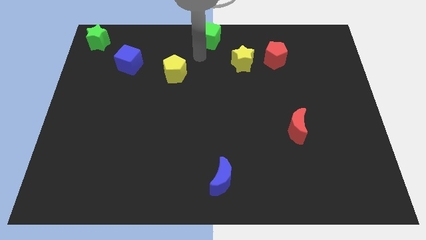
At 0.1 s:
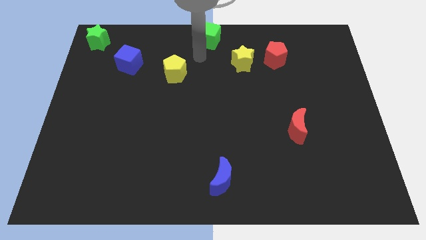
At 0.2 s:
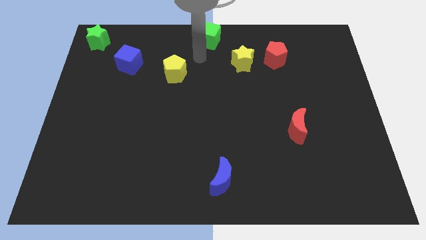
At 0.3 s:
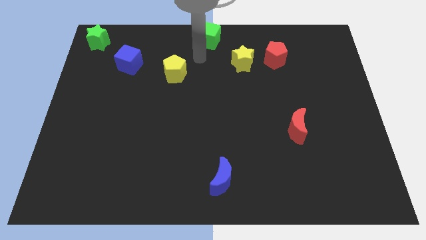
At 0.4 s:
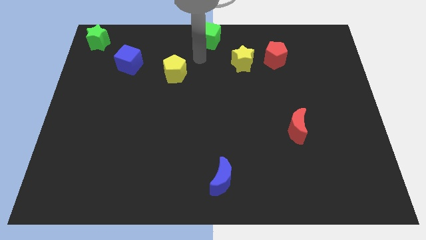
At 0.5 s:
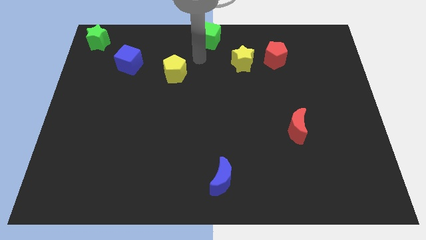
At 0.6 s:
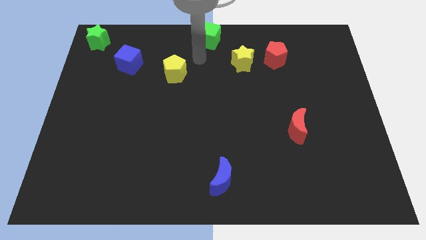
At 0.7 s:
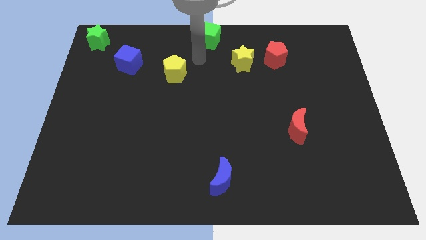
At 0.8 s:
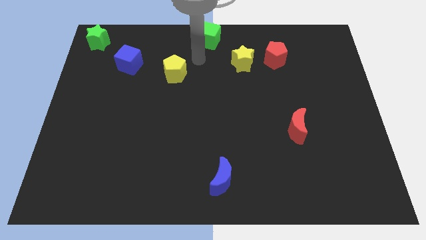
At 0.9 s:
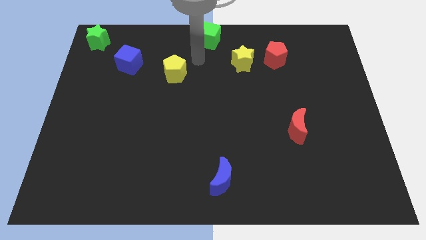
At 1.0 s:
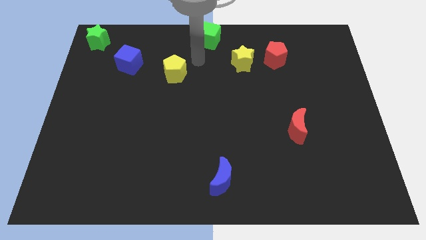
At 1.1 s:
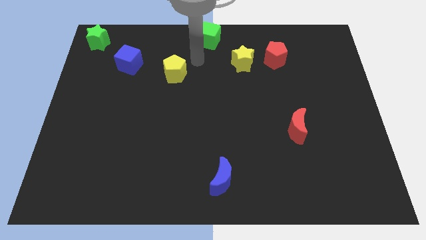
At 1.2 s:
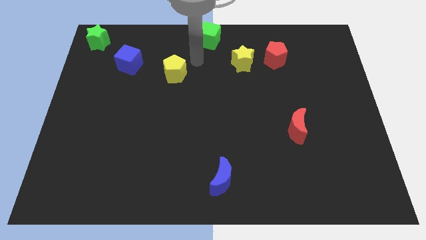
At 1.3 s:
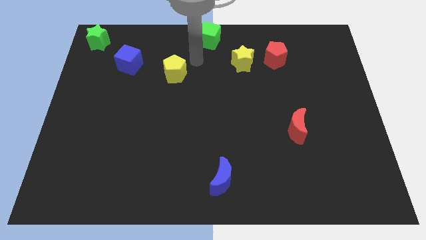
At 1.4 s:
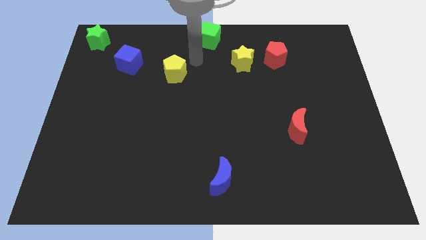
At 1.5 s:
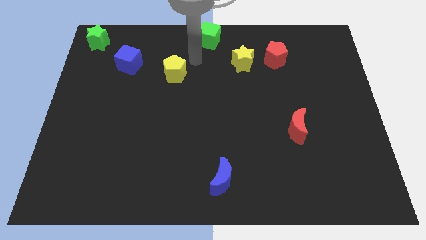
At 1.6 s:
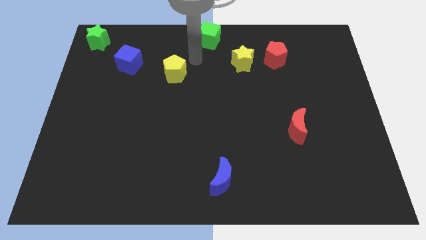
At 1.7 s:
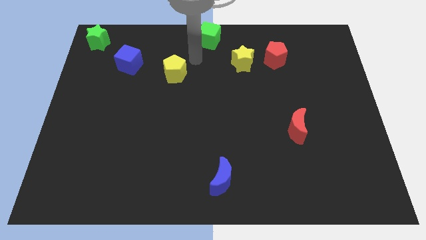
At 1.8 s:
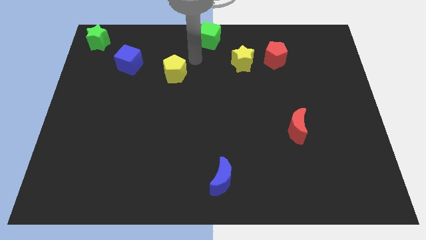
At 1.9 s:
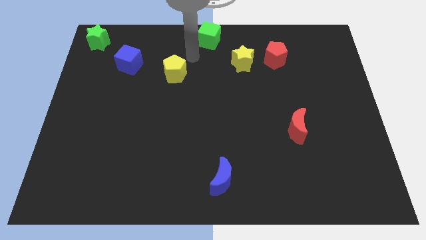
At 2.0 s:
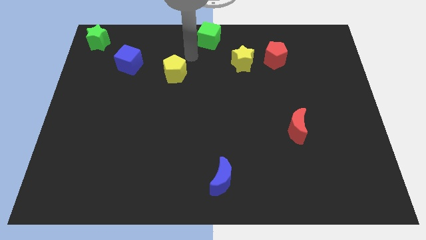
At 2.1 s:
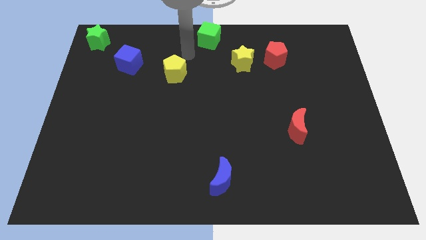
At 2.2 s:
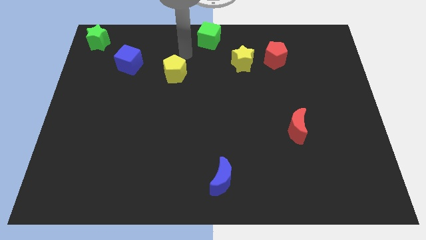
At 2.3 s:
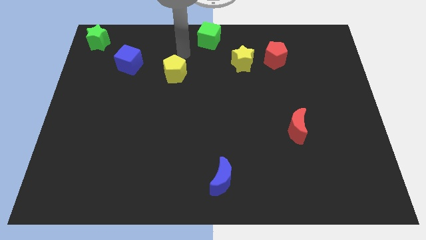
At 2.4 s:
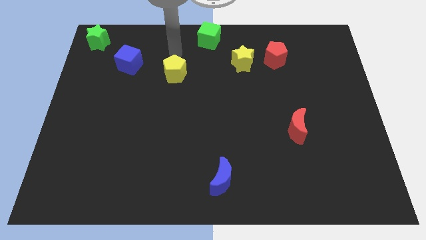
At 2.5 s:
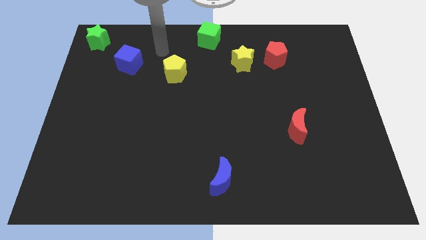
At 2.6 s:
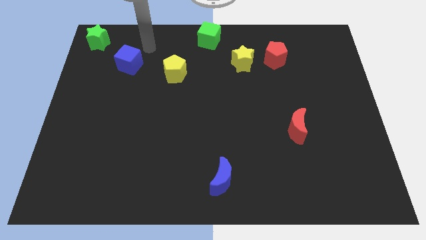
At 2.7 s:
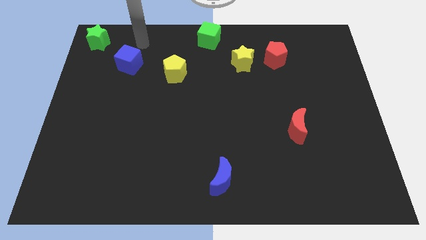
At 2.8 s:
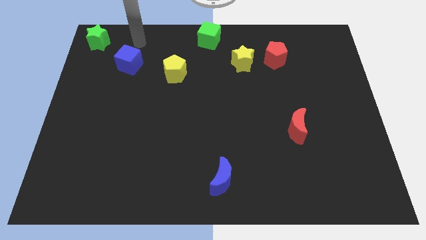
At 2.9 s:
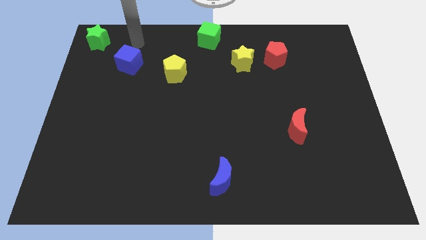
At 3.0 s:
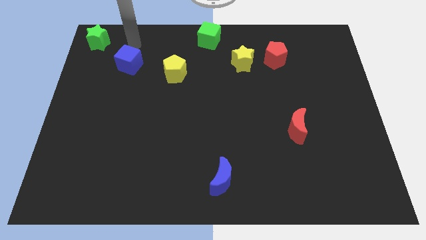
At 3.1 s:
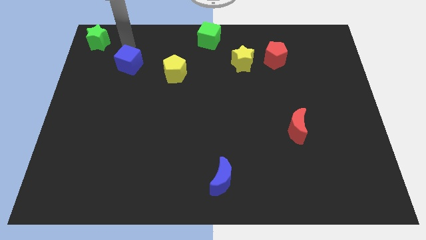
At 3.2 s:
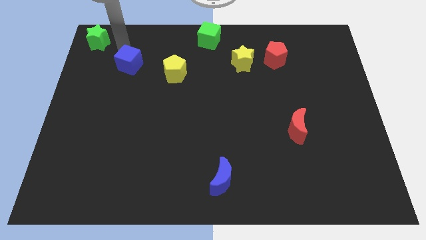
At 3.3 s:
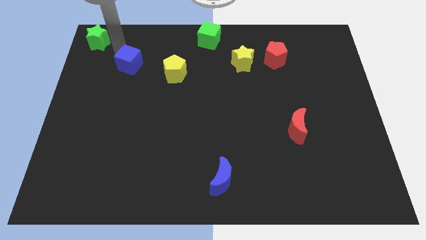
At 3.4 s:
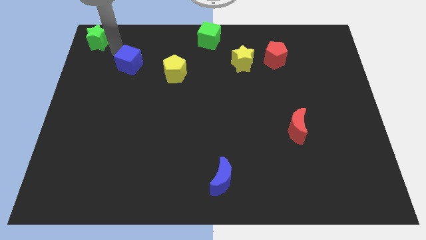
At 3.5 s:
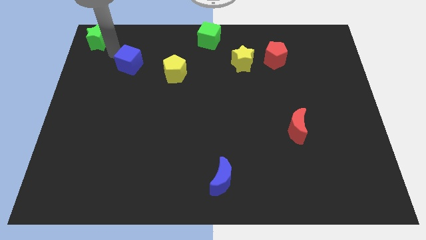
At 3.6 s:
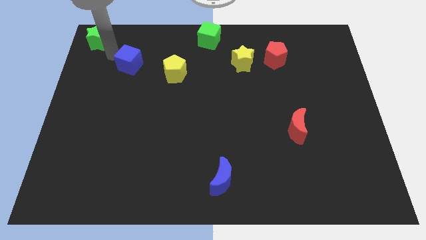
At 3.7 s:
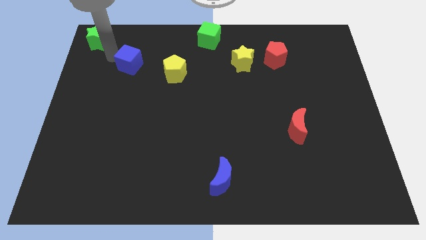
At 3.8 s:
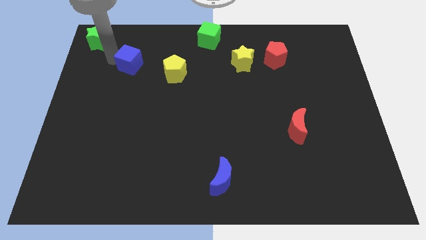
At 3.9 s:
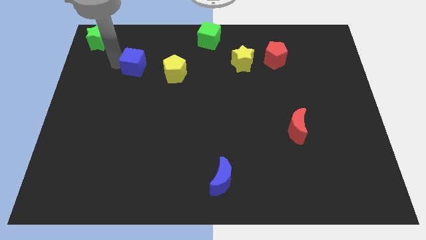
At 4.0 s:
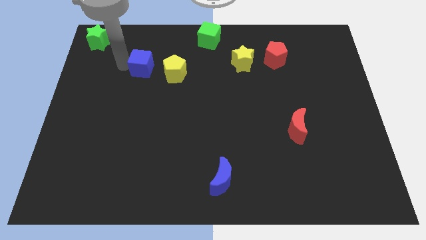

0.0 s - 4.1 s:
move your arm towards the blue cube

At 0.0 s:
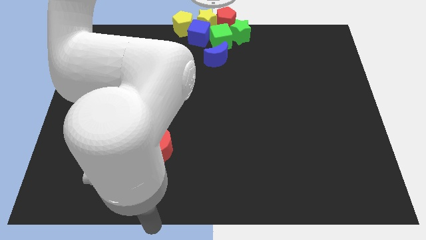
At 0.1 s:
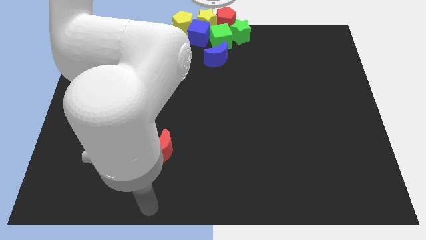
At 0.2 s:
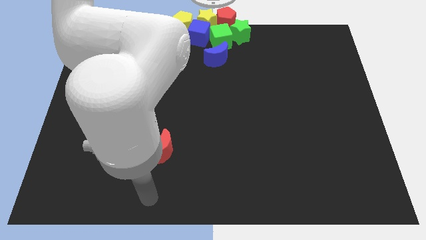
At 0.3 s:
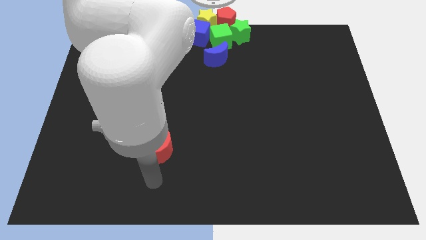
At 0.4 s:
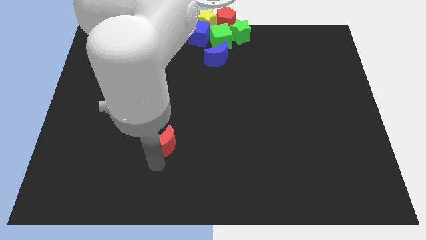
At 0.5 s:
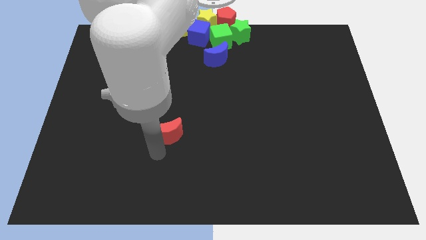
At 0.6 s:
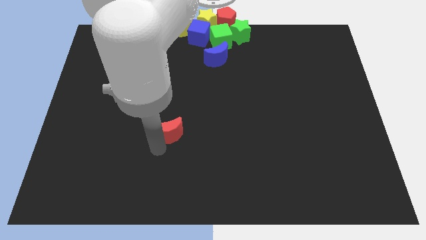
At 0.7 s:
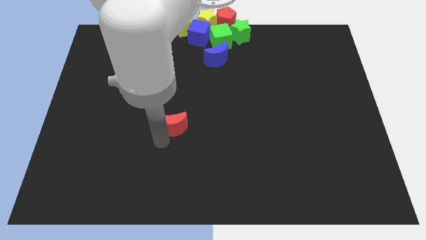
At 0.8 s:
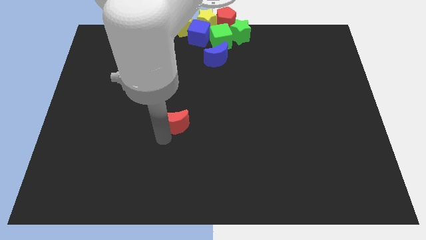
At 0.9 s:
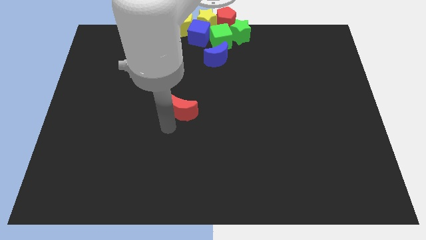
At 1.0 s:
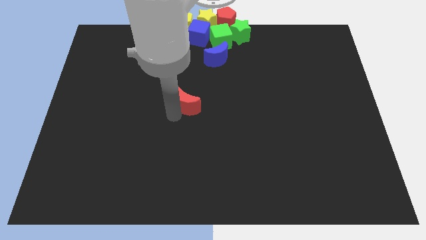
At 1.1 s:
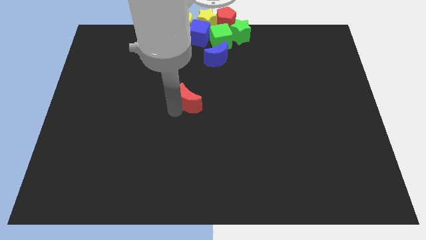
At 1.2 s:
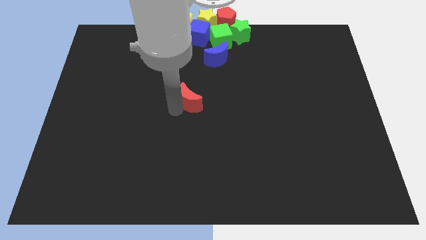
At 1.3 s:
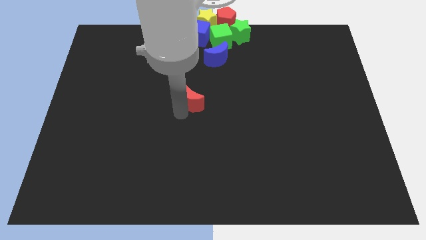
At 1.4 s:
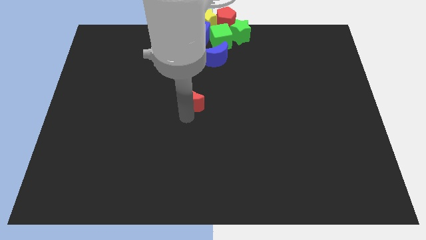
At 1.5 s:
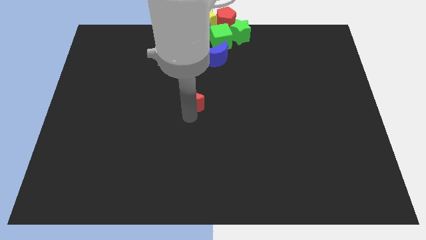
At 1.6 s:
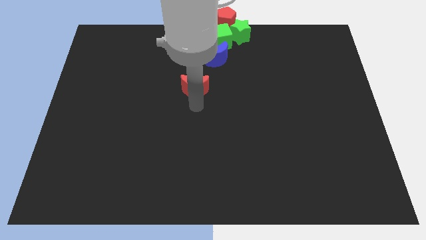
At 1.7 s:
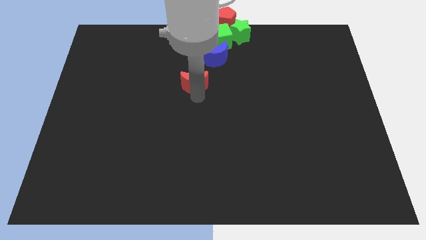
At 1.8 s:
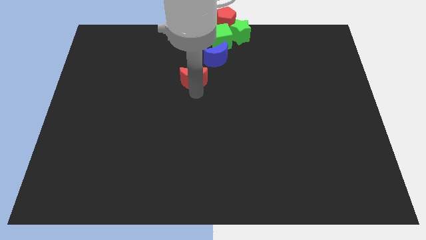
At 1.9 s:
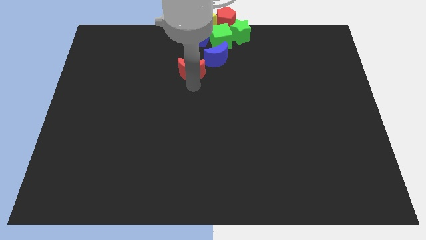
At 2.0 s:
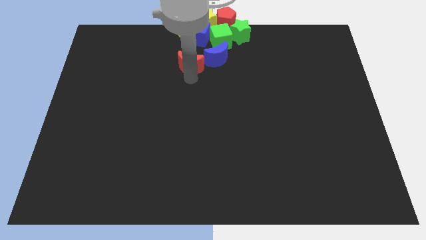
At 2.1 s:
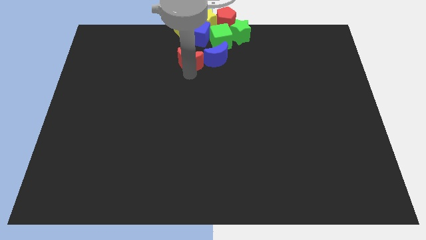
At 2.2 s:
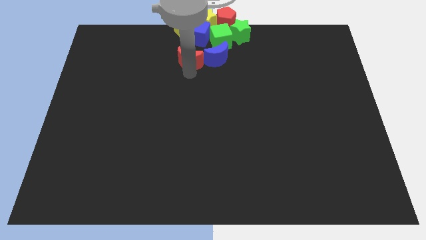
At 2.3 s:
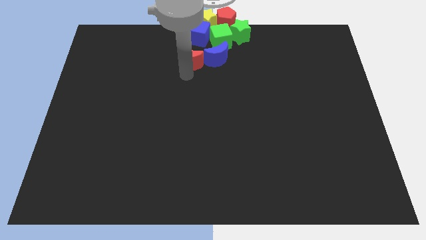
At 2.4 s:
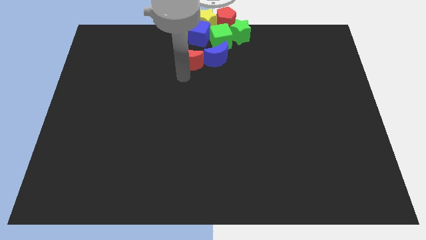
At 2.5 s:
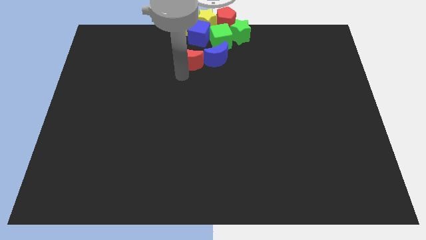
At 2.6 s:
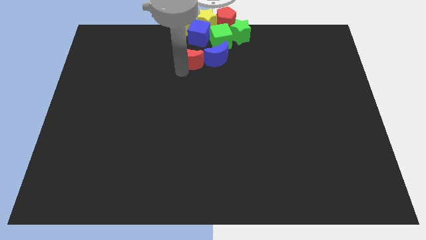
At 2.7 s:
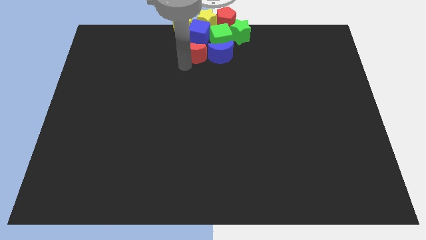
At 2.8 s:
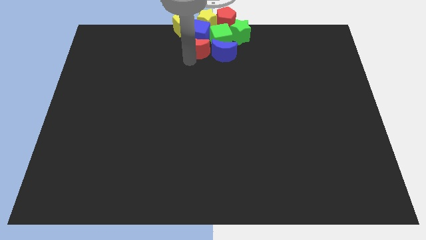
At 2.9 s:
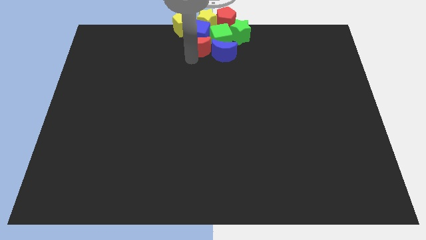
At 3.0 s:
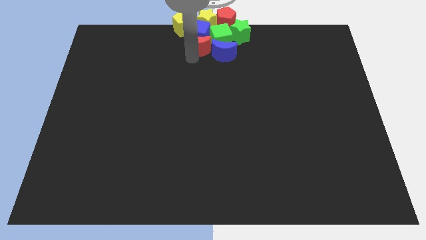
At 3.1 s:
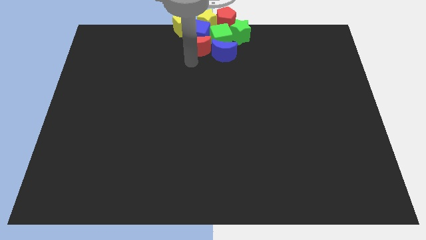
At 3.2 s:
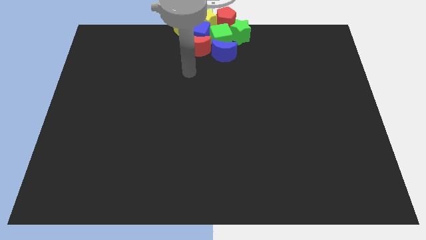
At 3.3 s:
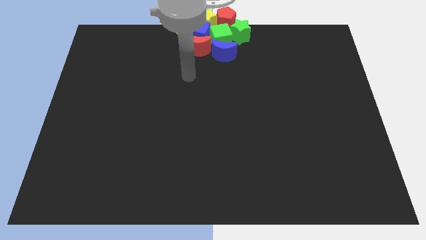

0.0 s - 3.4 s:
move the red crescent towards the top center

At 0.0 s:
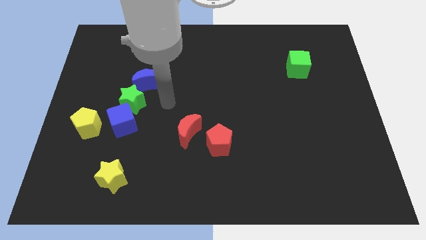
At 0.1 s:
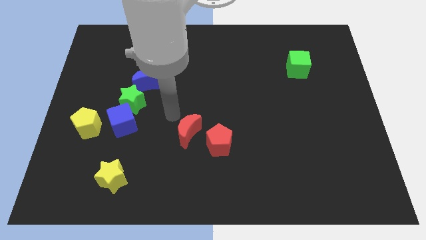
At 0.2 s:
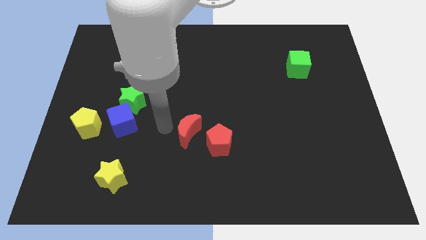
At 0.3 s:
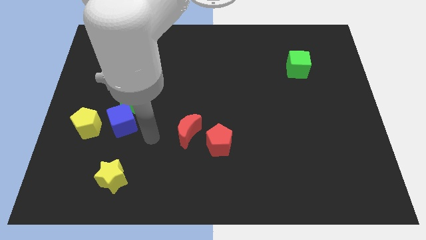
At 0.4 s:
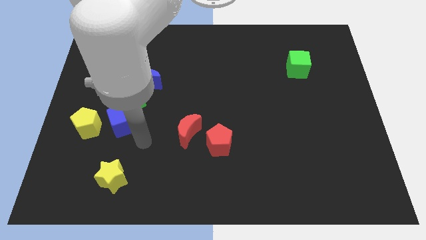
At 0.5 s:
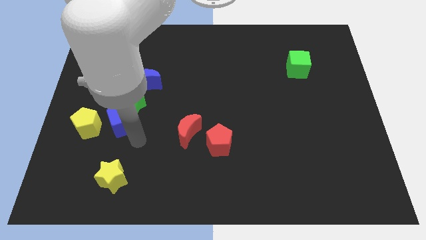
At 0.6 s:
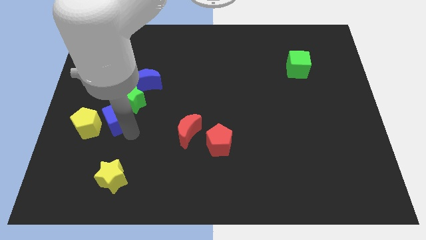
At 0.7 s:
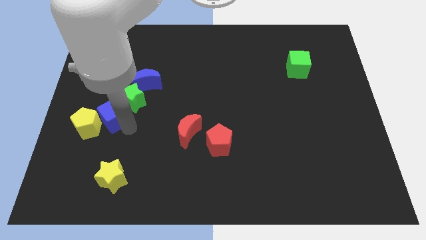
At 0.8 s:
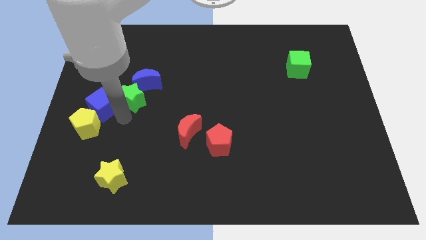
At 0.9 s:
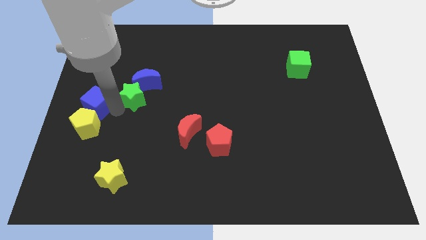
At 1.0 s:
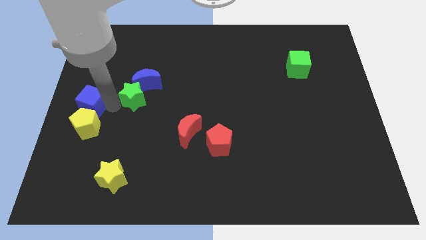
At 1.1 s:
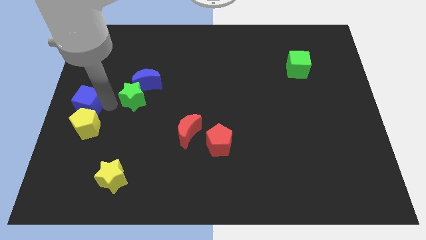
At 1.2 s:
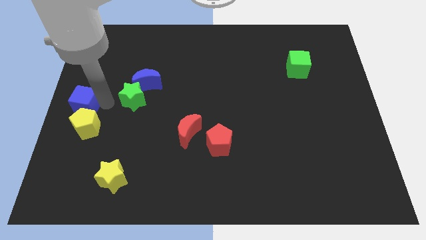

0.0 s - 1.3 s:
place the blue cube at the top of the yellow pentagon
